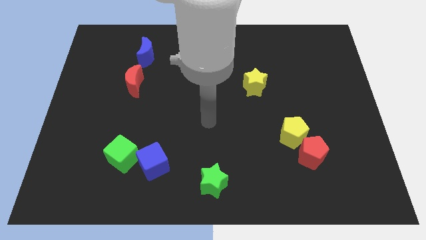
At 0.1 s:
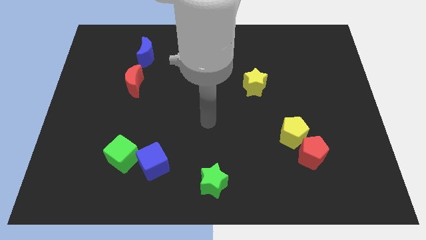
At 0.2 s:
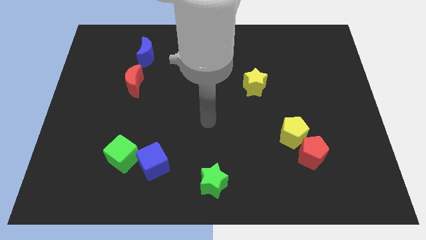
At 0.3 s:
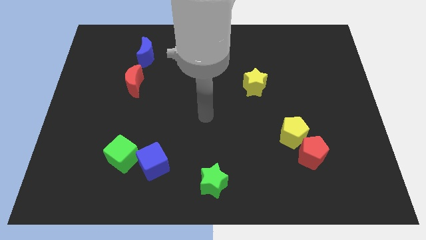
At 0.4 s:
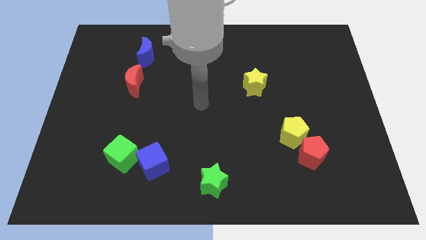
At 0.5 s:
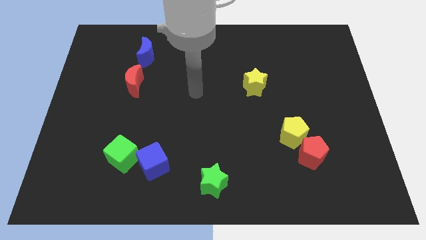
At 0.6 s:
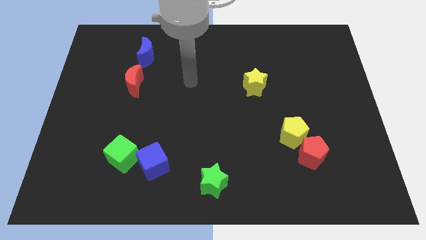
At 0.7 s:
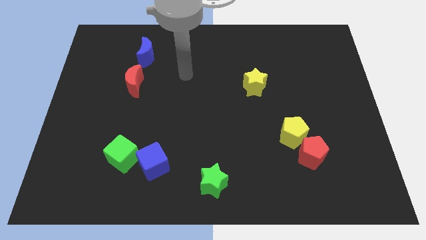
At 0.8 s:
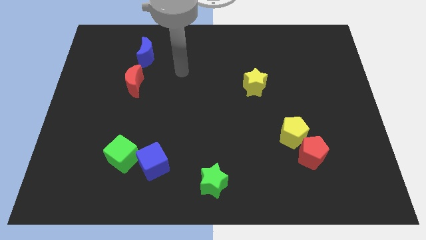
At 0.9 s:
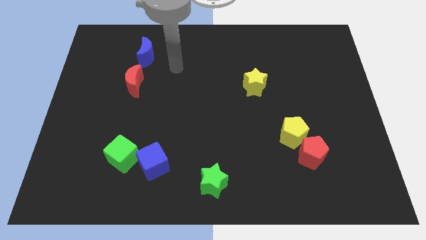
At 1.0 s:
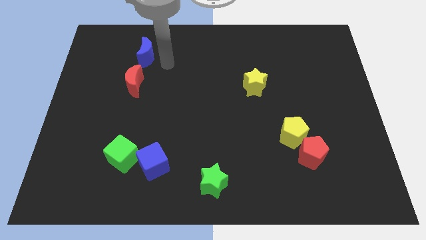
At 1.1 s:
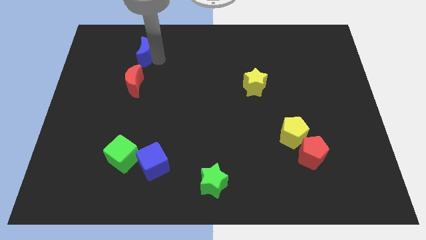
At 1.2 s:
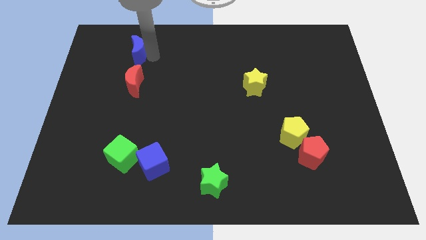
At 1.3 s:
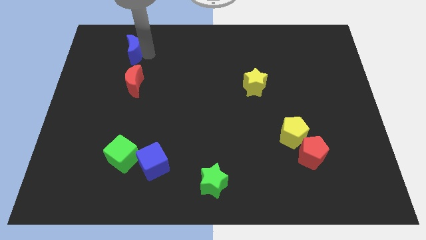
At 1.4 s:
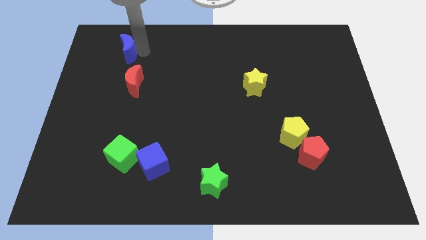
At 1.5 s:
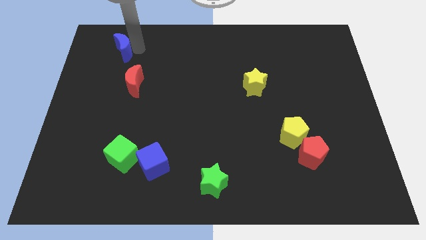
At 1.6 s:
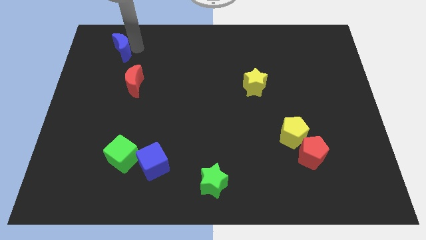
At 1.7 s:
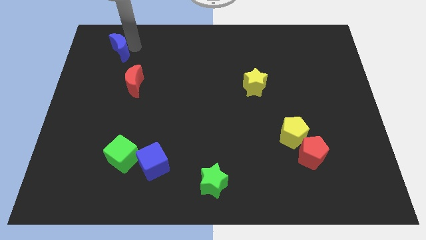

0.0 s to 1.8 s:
slide the blue moon diagonally top left to the red moon

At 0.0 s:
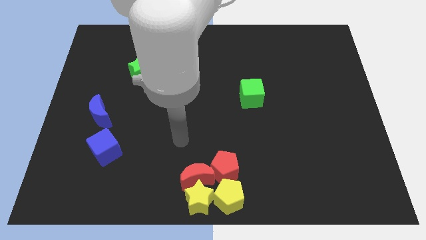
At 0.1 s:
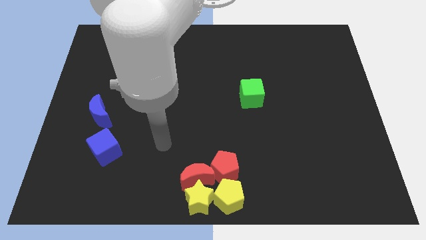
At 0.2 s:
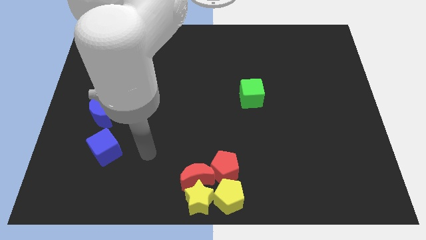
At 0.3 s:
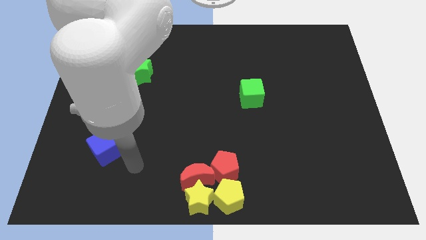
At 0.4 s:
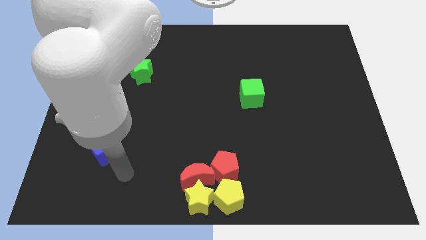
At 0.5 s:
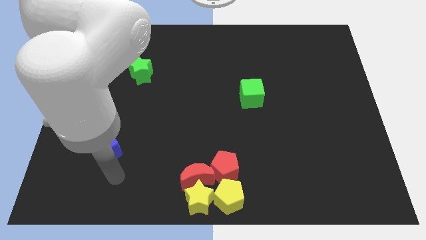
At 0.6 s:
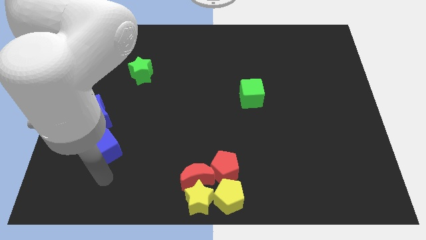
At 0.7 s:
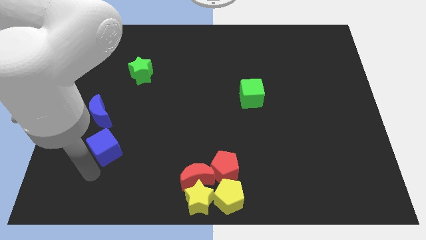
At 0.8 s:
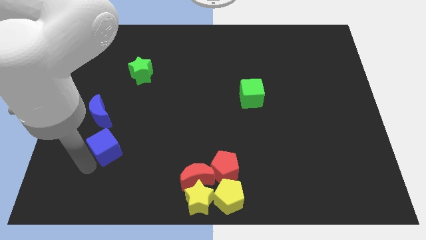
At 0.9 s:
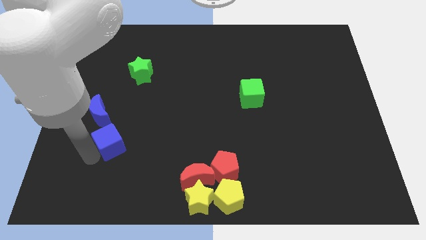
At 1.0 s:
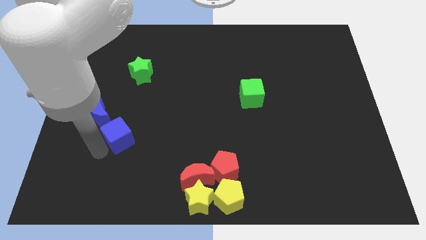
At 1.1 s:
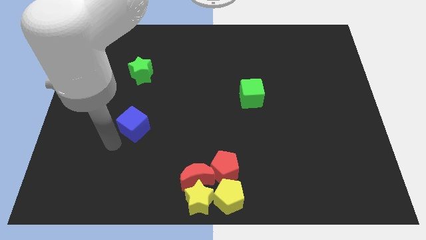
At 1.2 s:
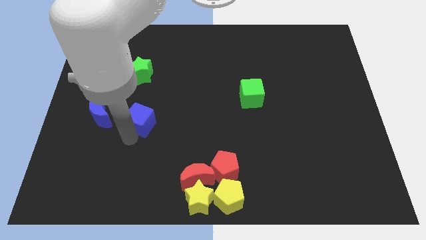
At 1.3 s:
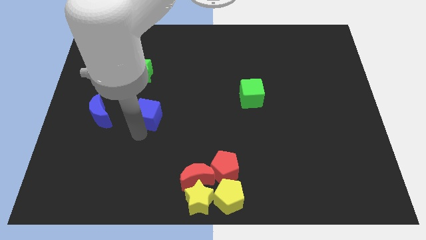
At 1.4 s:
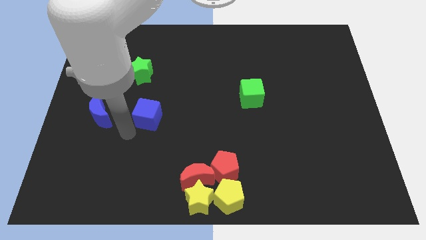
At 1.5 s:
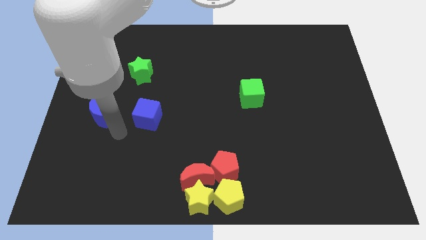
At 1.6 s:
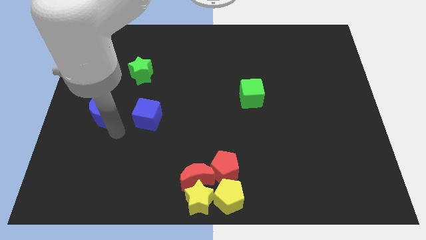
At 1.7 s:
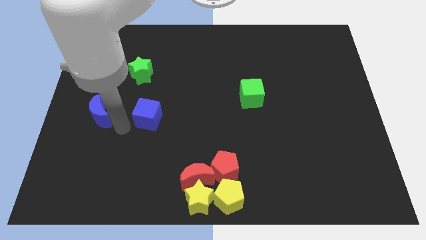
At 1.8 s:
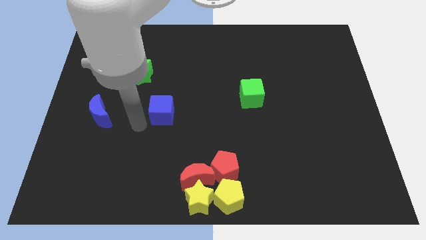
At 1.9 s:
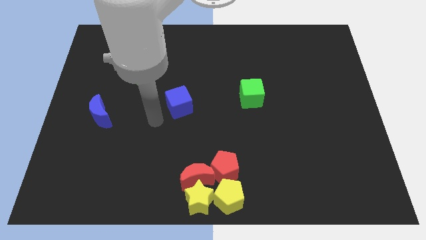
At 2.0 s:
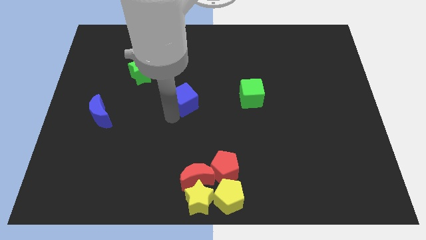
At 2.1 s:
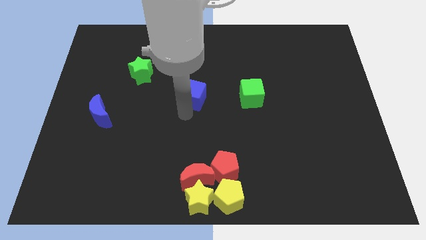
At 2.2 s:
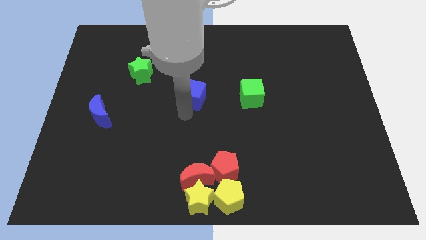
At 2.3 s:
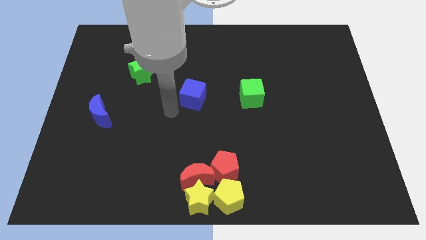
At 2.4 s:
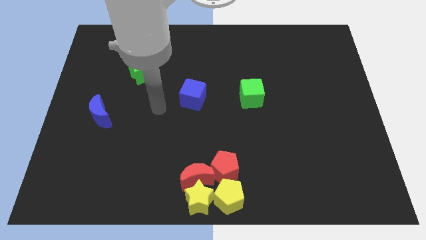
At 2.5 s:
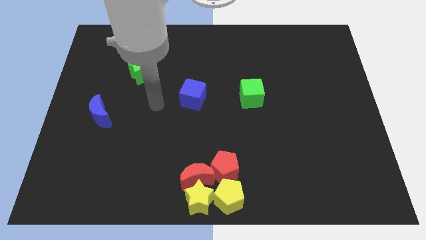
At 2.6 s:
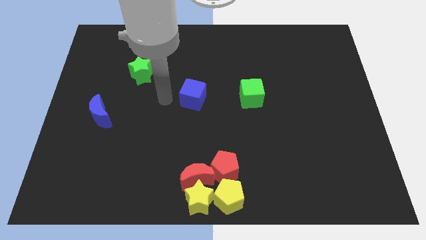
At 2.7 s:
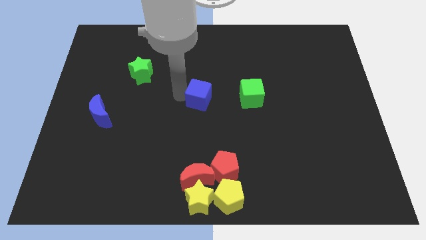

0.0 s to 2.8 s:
place blue cube towards the centre of the board

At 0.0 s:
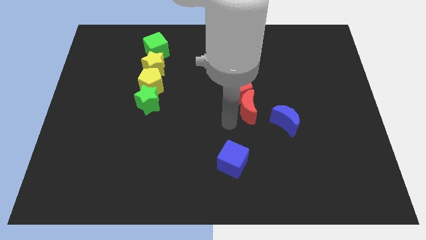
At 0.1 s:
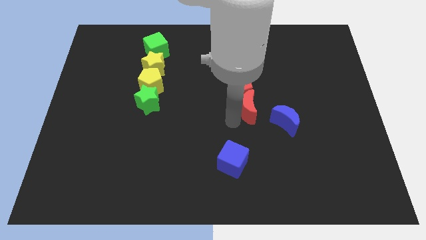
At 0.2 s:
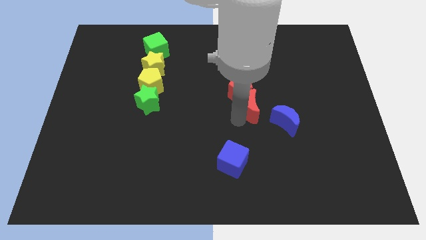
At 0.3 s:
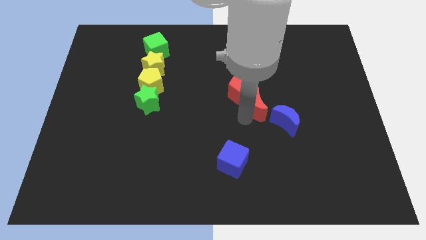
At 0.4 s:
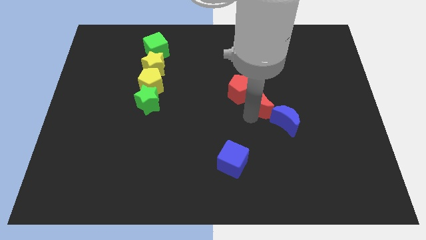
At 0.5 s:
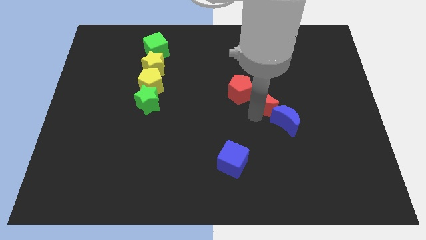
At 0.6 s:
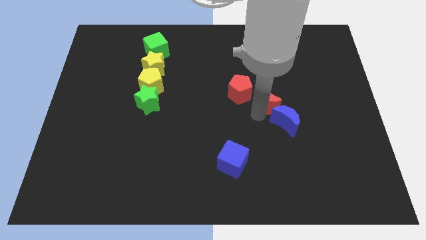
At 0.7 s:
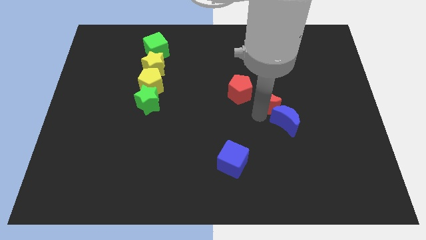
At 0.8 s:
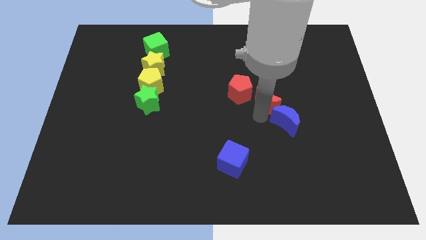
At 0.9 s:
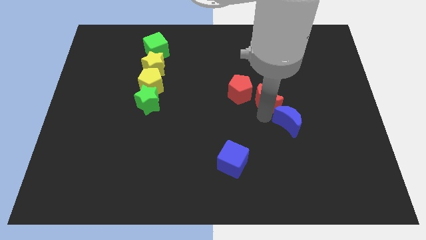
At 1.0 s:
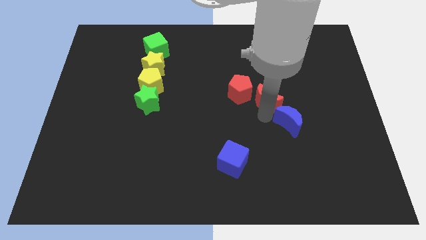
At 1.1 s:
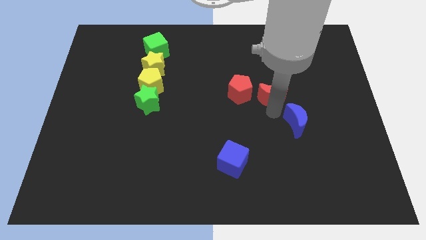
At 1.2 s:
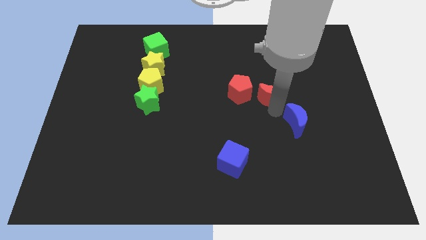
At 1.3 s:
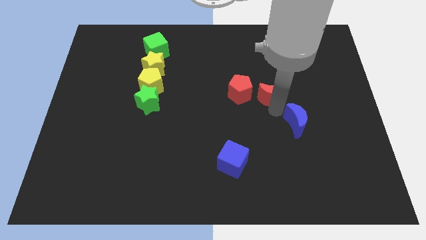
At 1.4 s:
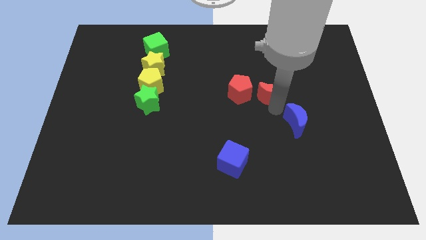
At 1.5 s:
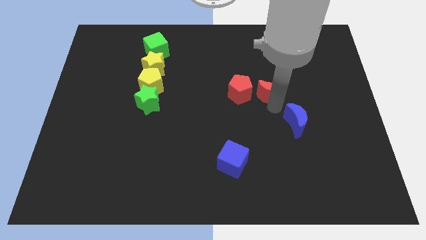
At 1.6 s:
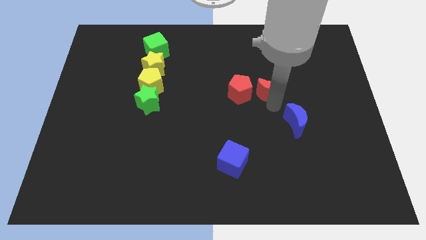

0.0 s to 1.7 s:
put the red crescent on the right side of the red pentagon

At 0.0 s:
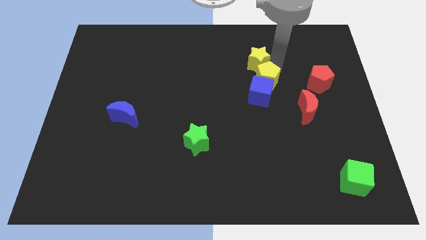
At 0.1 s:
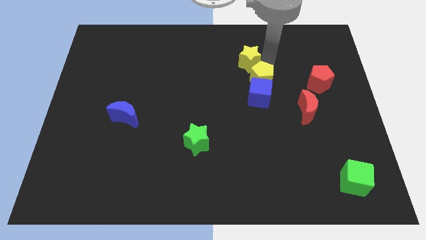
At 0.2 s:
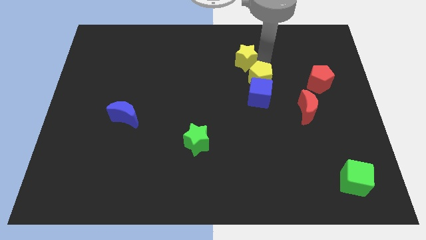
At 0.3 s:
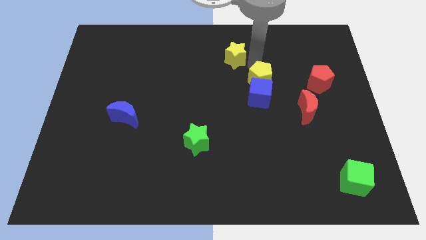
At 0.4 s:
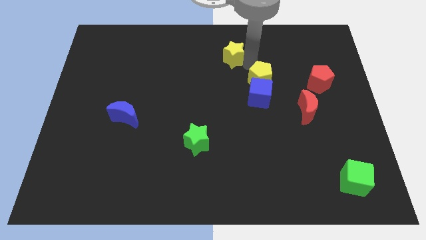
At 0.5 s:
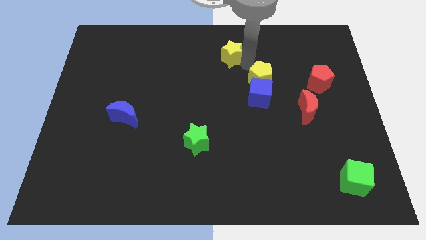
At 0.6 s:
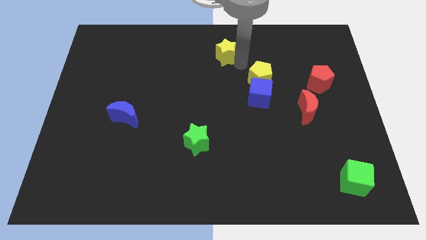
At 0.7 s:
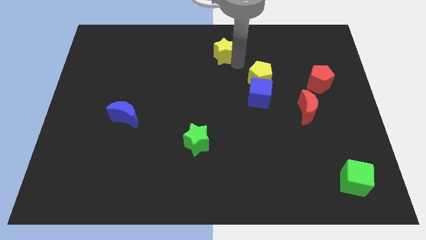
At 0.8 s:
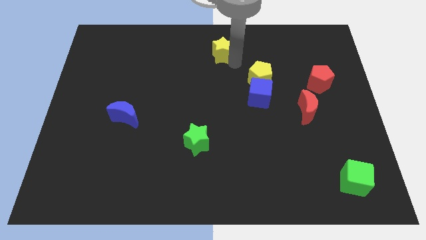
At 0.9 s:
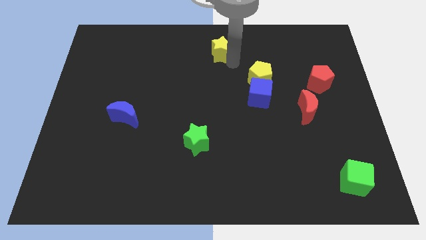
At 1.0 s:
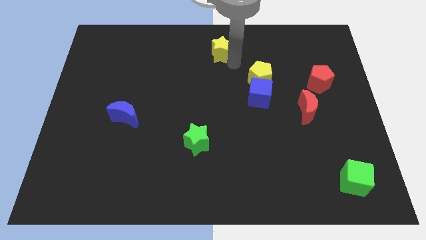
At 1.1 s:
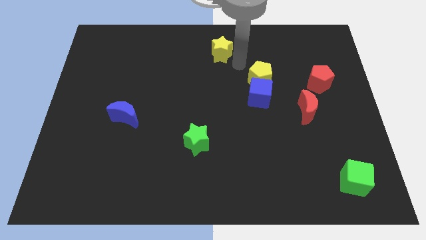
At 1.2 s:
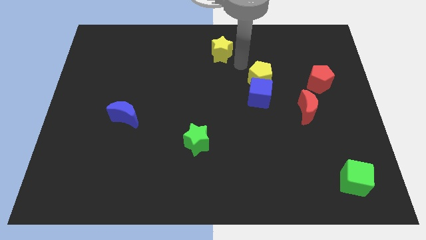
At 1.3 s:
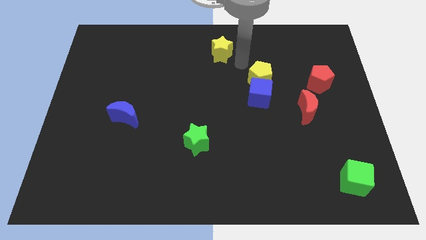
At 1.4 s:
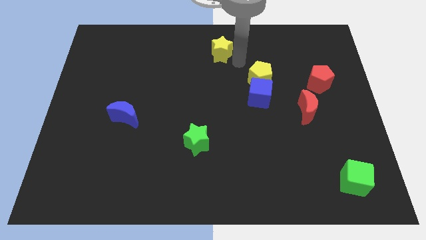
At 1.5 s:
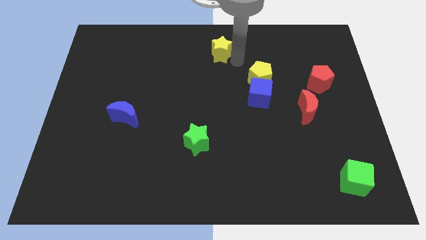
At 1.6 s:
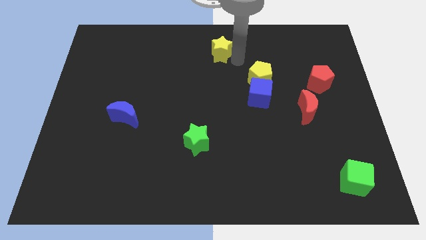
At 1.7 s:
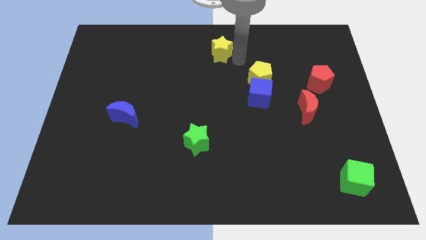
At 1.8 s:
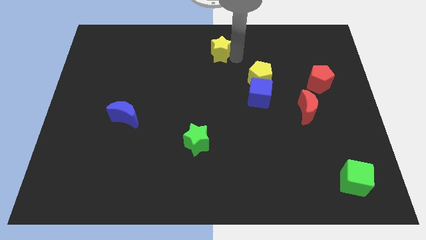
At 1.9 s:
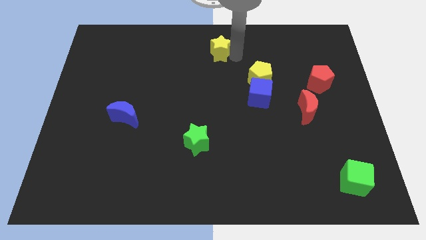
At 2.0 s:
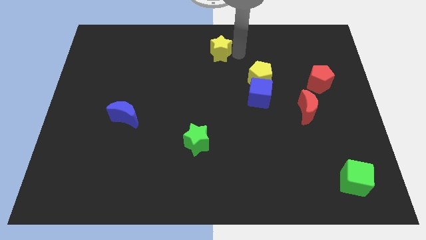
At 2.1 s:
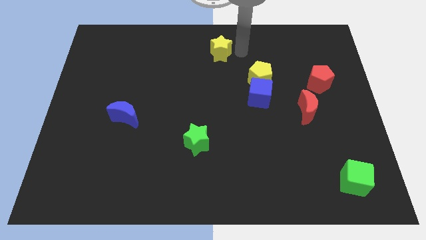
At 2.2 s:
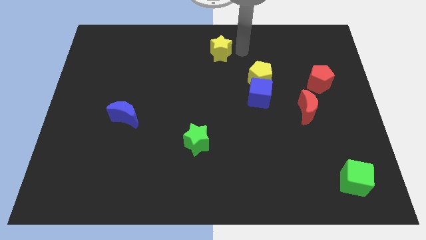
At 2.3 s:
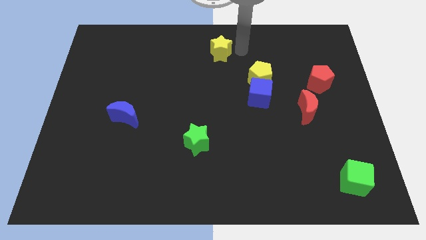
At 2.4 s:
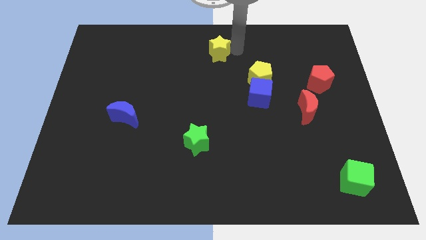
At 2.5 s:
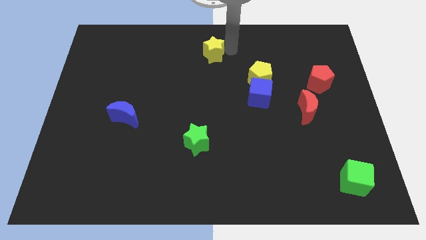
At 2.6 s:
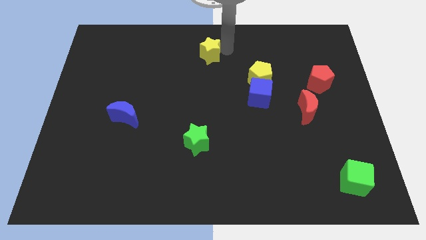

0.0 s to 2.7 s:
move the yellow star to the top center of the board
